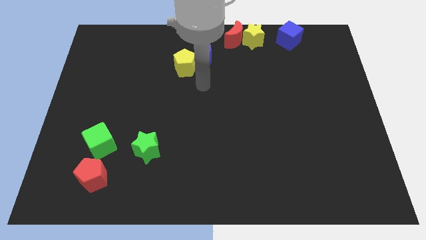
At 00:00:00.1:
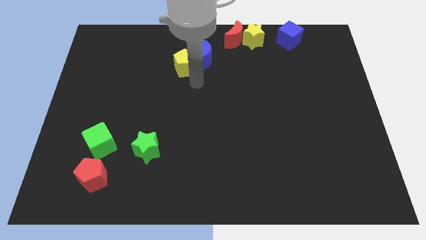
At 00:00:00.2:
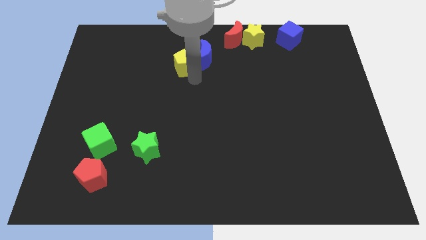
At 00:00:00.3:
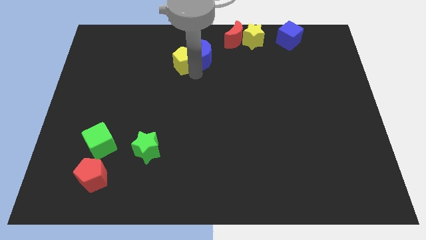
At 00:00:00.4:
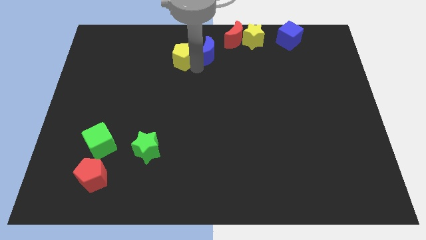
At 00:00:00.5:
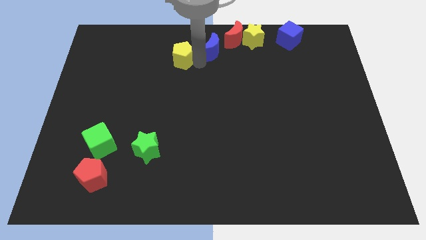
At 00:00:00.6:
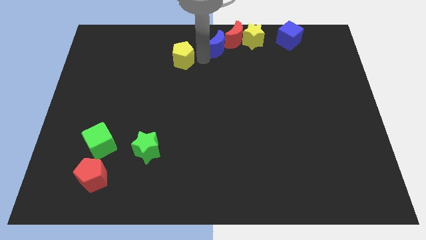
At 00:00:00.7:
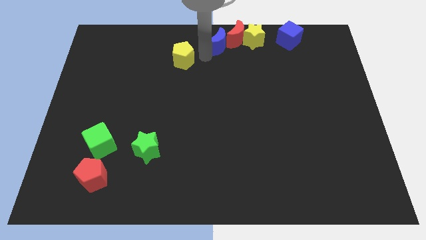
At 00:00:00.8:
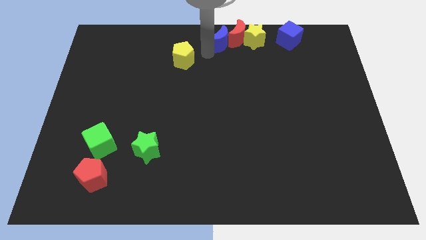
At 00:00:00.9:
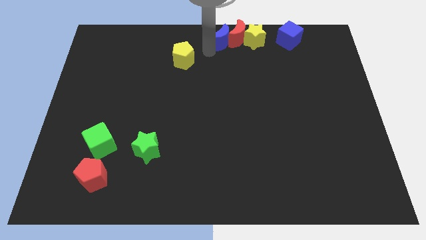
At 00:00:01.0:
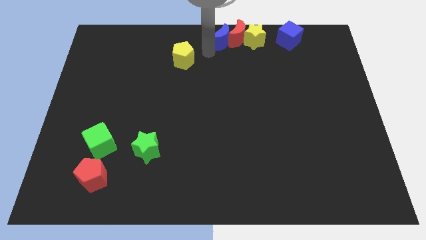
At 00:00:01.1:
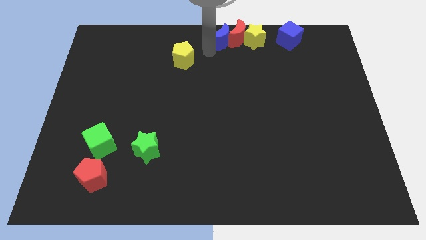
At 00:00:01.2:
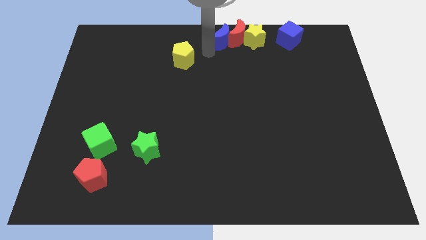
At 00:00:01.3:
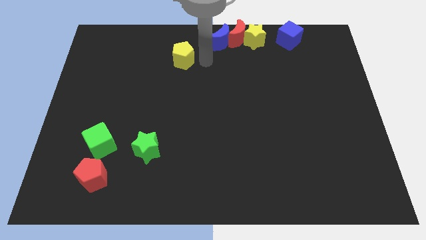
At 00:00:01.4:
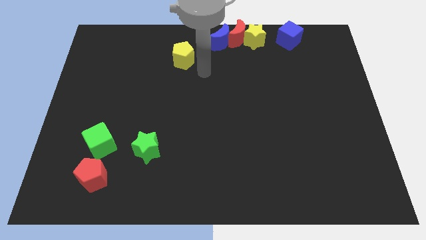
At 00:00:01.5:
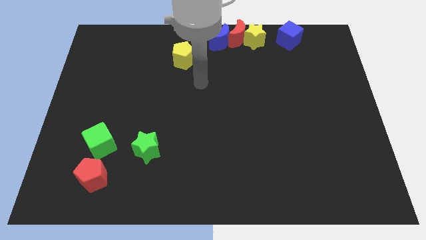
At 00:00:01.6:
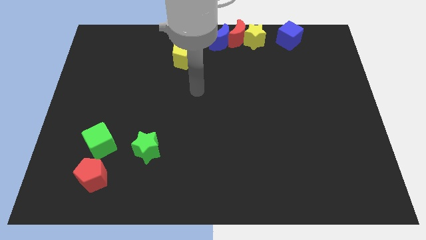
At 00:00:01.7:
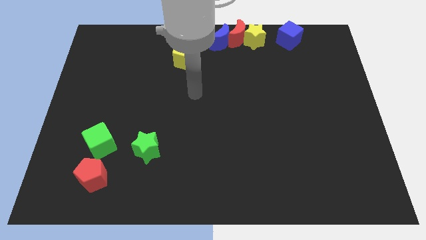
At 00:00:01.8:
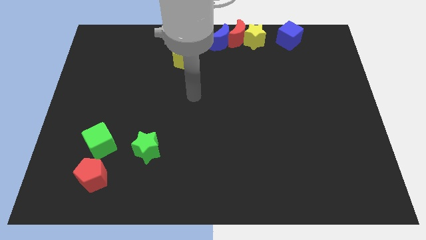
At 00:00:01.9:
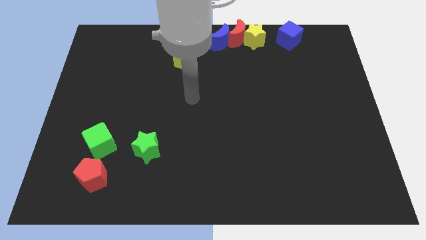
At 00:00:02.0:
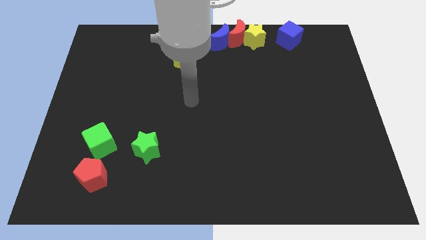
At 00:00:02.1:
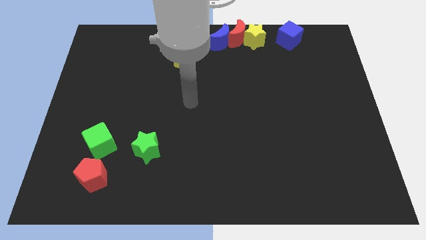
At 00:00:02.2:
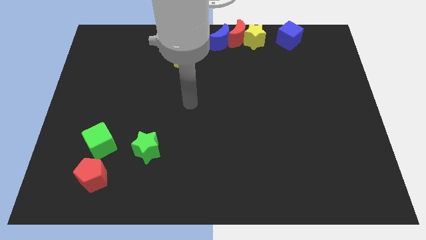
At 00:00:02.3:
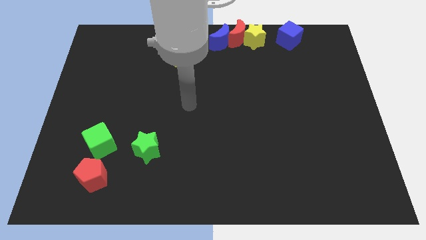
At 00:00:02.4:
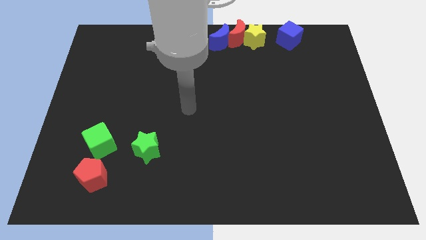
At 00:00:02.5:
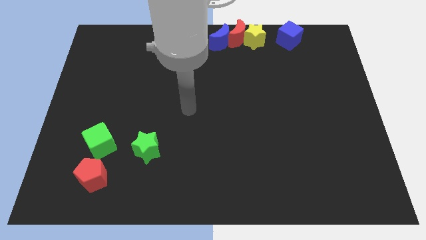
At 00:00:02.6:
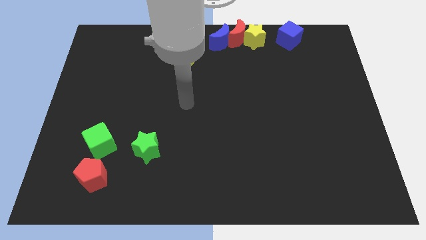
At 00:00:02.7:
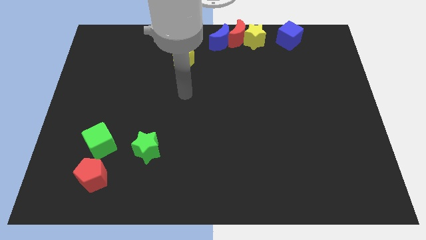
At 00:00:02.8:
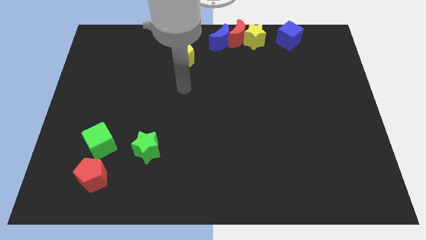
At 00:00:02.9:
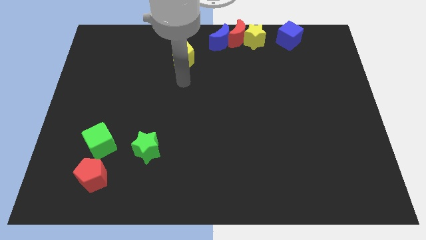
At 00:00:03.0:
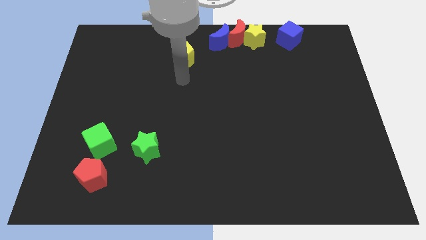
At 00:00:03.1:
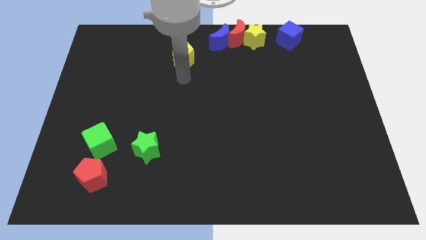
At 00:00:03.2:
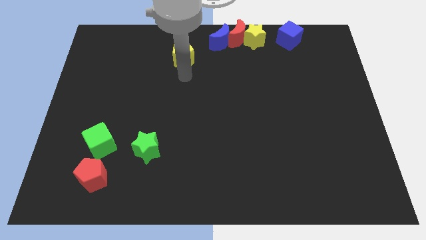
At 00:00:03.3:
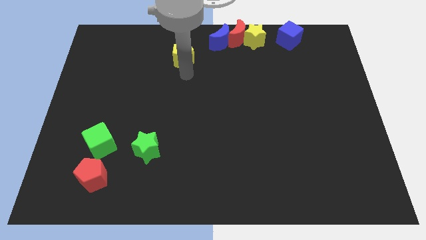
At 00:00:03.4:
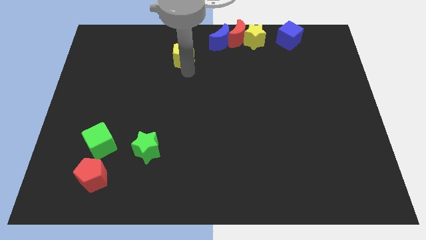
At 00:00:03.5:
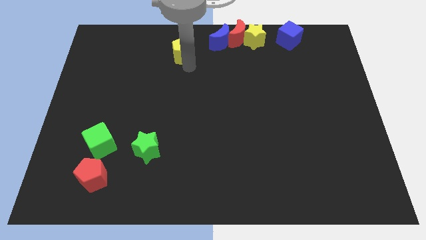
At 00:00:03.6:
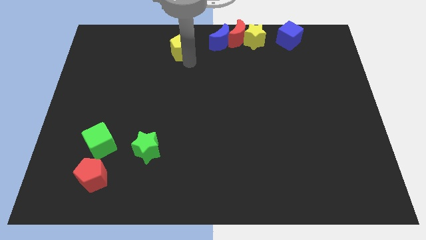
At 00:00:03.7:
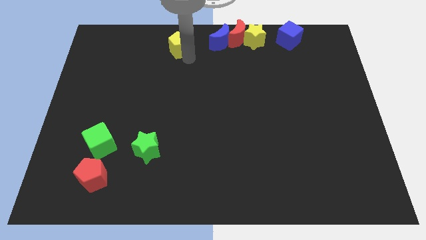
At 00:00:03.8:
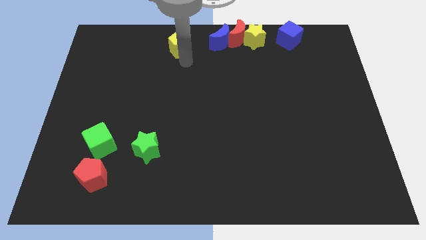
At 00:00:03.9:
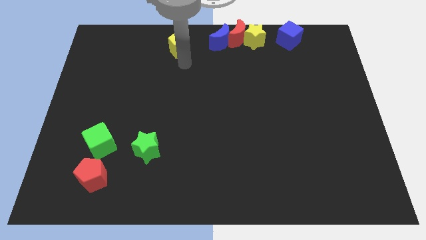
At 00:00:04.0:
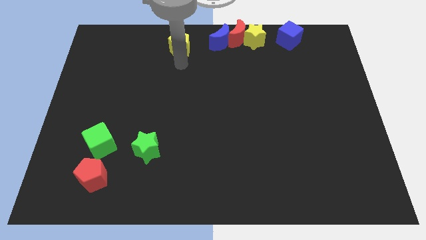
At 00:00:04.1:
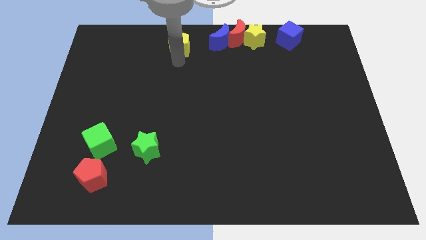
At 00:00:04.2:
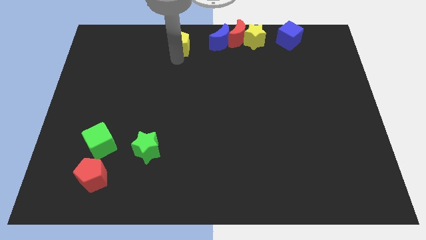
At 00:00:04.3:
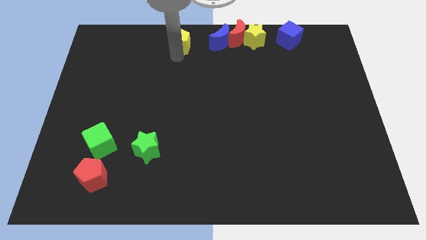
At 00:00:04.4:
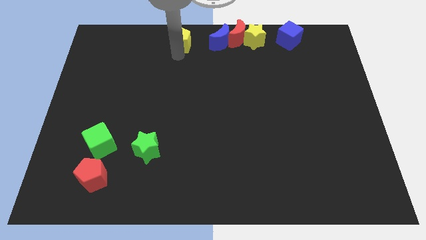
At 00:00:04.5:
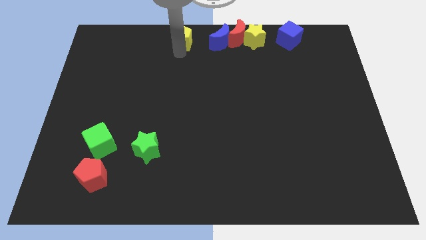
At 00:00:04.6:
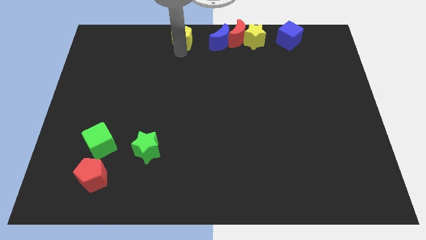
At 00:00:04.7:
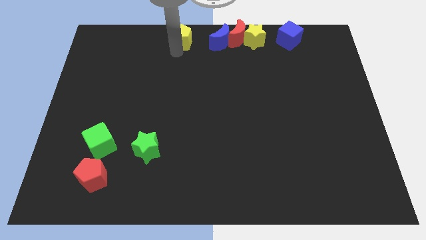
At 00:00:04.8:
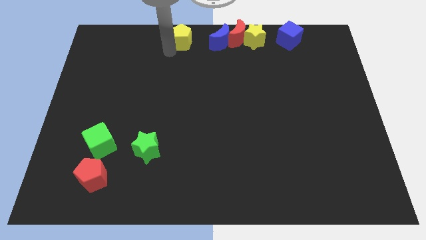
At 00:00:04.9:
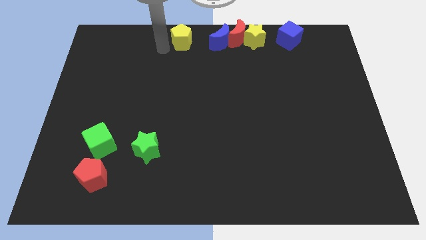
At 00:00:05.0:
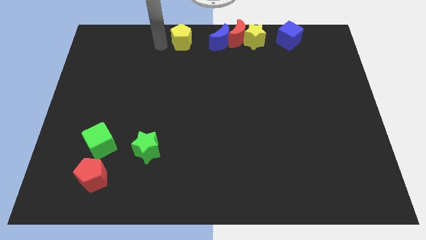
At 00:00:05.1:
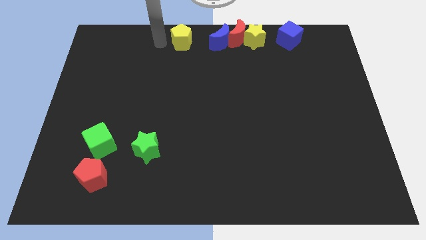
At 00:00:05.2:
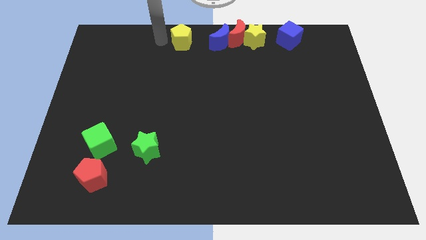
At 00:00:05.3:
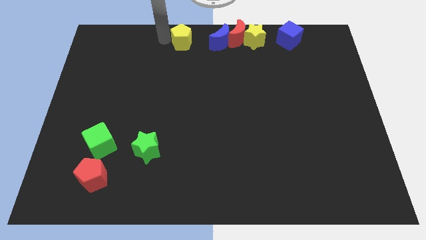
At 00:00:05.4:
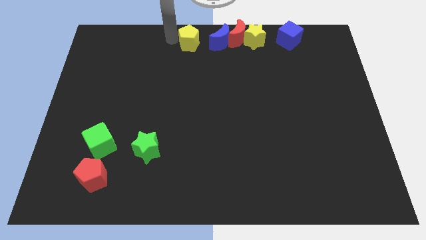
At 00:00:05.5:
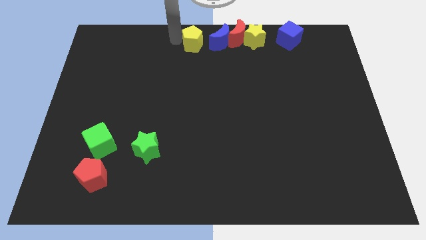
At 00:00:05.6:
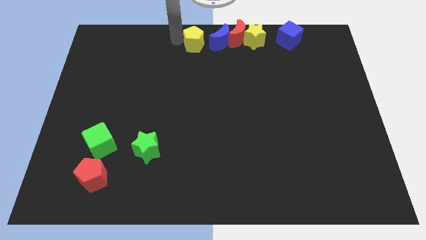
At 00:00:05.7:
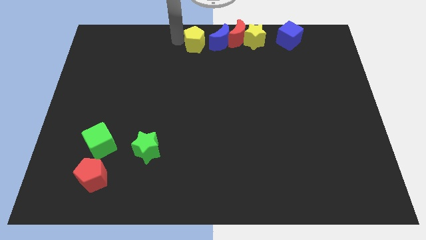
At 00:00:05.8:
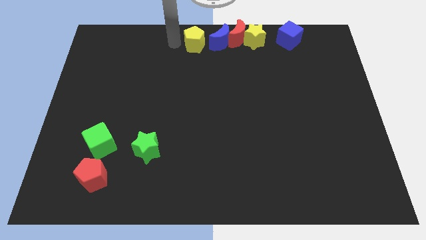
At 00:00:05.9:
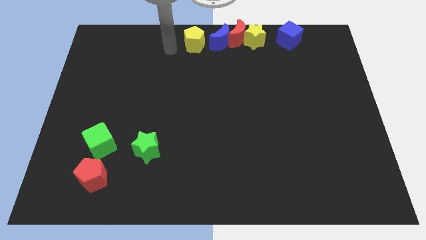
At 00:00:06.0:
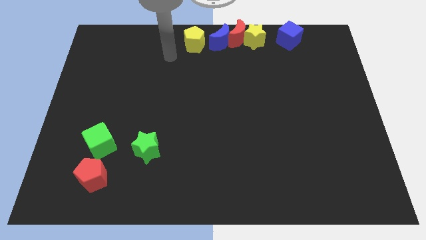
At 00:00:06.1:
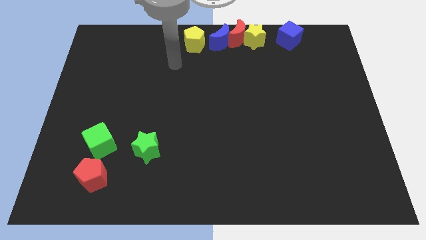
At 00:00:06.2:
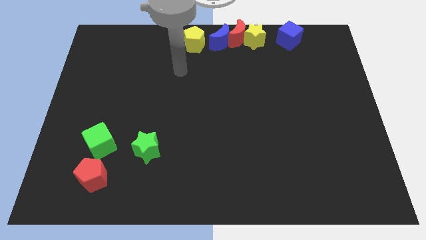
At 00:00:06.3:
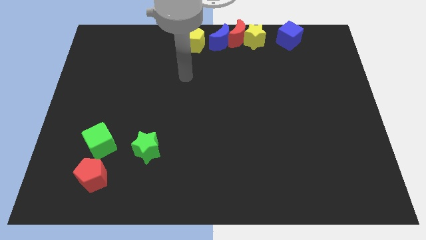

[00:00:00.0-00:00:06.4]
place the blue crescent to the top center of the board

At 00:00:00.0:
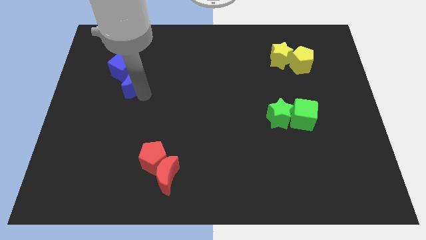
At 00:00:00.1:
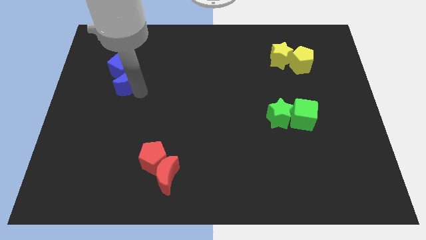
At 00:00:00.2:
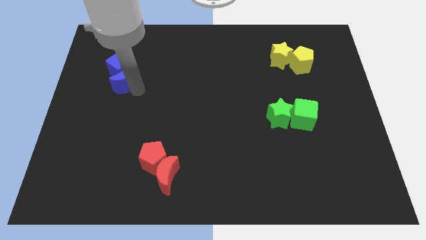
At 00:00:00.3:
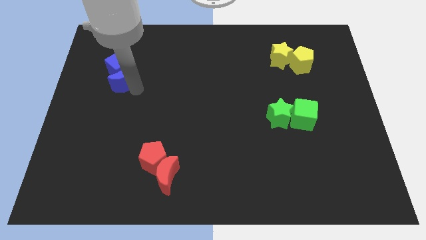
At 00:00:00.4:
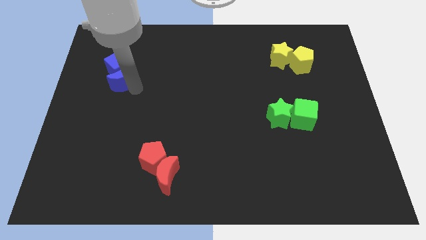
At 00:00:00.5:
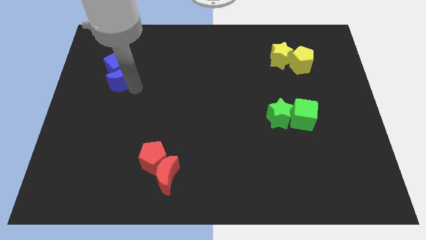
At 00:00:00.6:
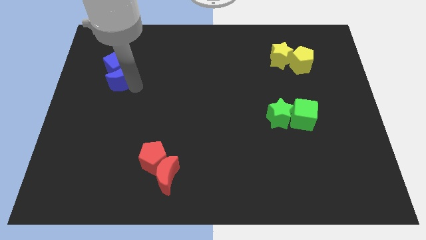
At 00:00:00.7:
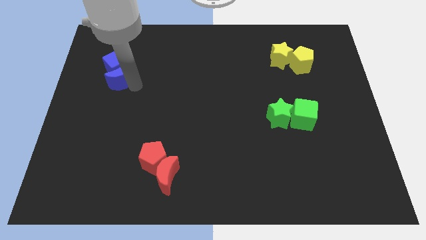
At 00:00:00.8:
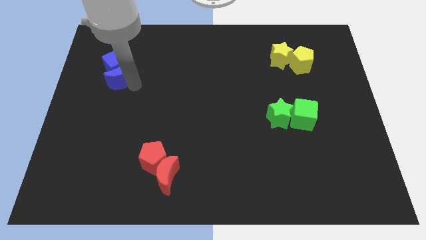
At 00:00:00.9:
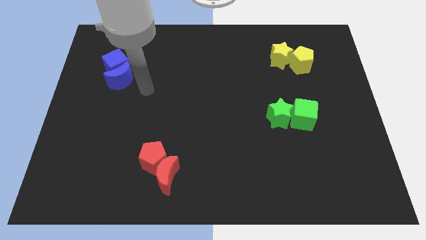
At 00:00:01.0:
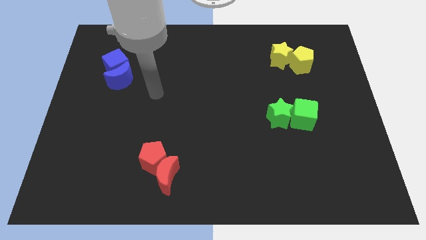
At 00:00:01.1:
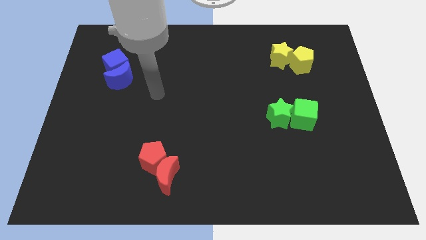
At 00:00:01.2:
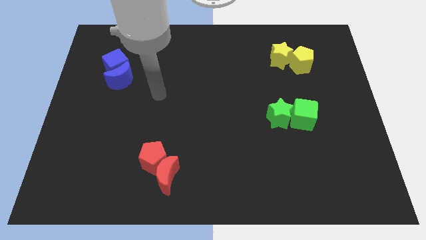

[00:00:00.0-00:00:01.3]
move blue blocks towards top left

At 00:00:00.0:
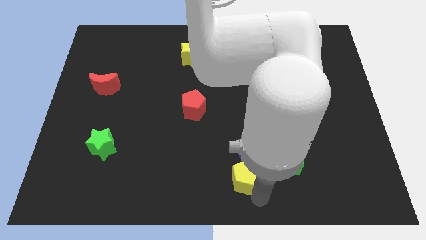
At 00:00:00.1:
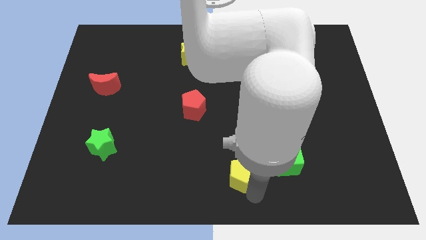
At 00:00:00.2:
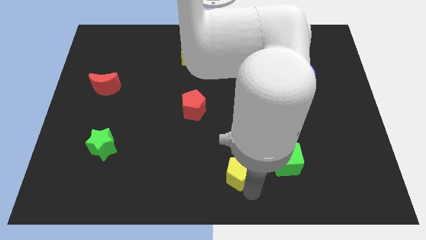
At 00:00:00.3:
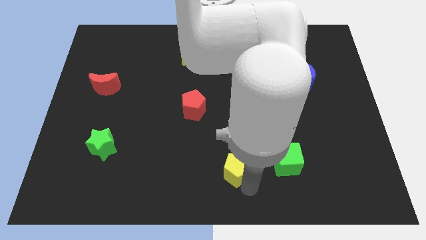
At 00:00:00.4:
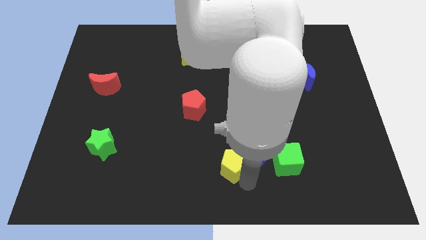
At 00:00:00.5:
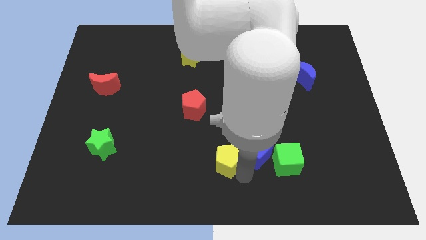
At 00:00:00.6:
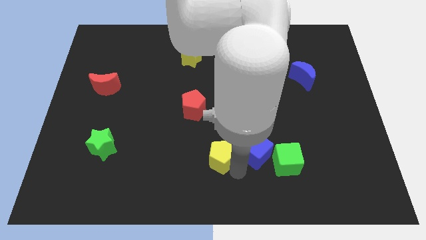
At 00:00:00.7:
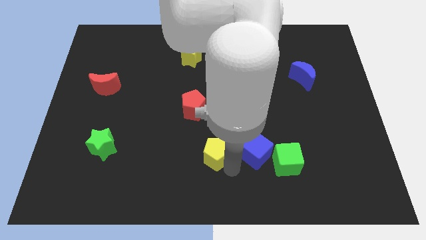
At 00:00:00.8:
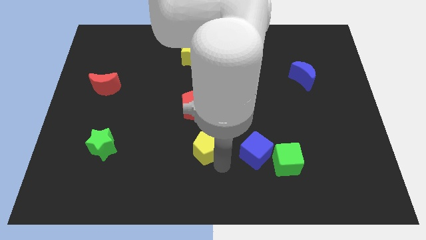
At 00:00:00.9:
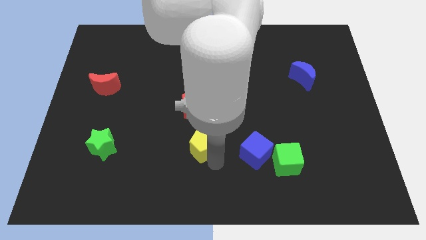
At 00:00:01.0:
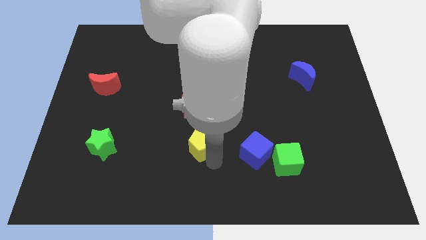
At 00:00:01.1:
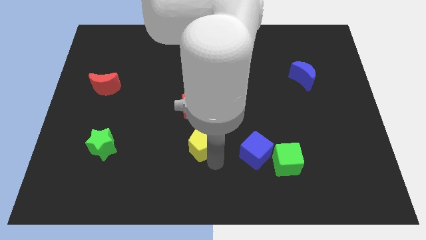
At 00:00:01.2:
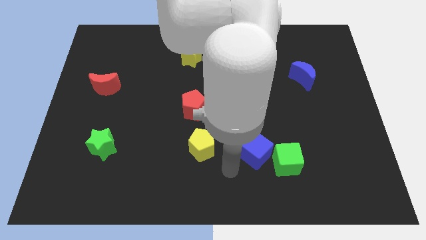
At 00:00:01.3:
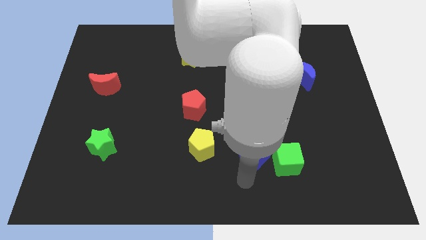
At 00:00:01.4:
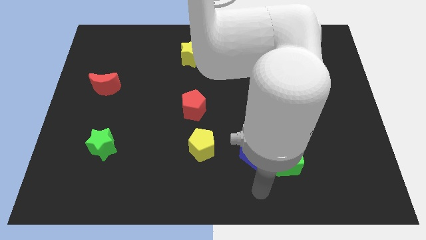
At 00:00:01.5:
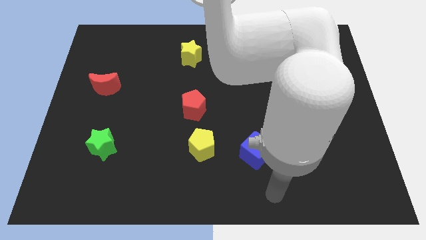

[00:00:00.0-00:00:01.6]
push yellow pentagon to the left of blue cube
